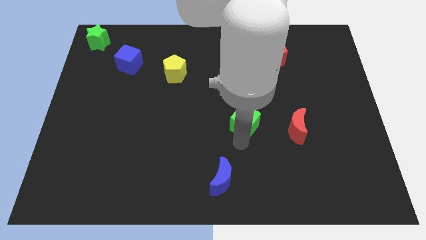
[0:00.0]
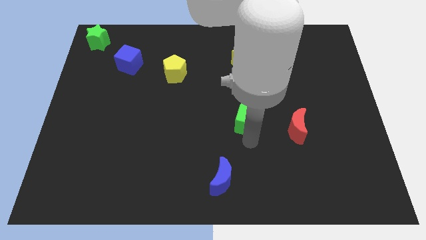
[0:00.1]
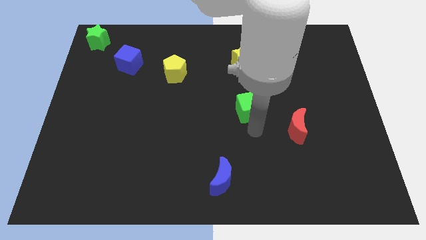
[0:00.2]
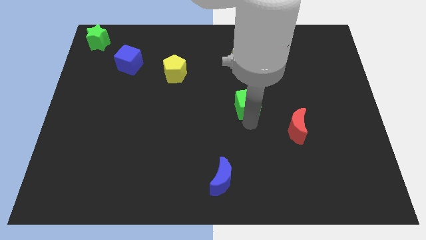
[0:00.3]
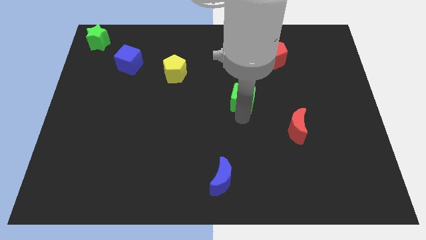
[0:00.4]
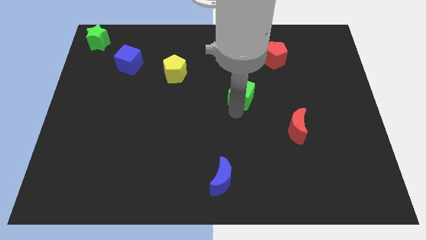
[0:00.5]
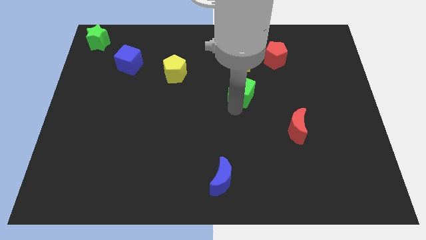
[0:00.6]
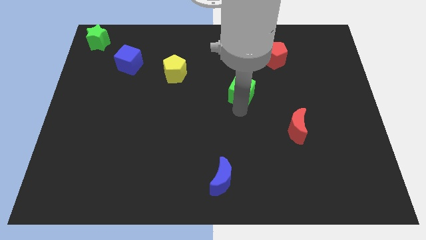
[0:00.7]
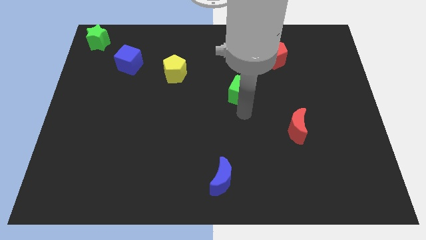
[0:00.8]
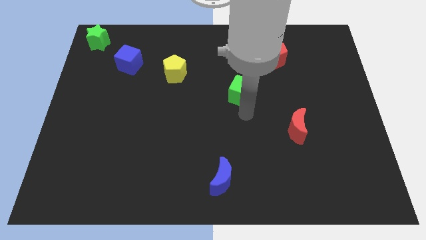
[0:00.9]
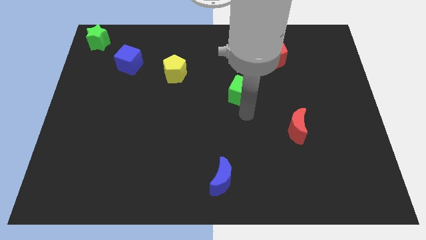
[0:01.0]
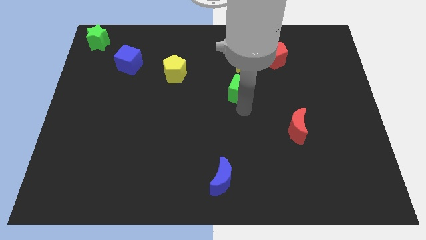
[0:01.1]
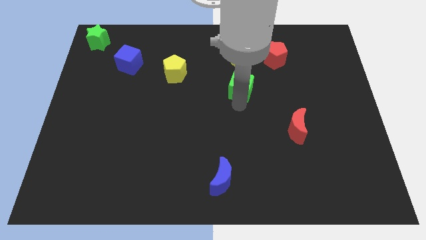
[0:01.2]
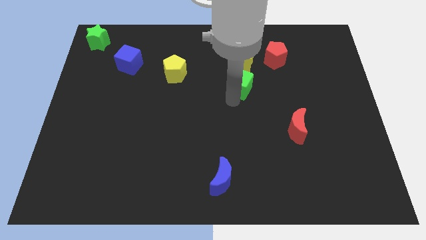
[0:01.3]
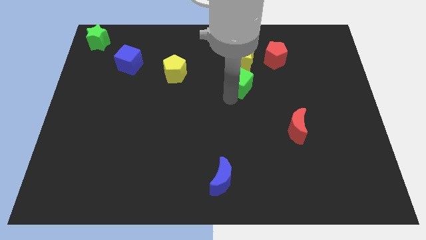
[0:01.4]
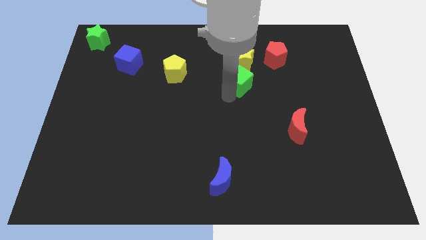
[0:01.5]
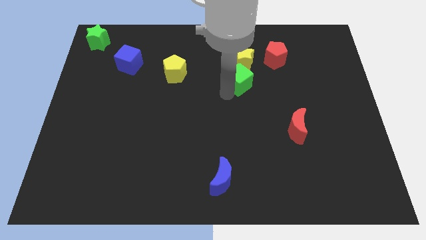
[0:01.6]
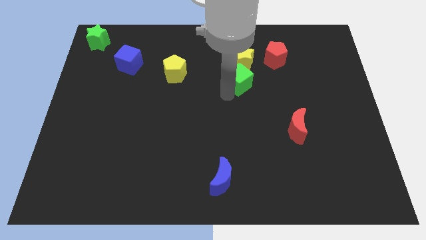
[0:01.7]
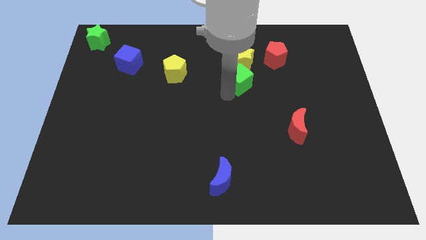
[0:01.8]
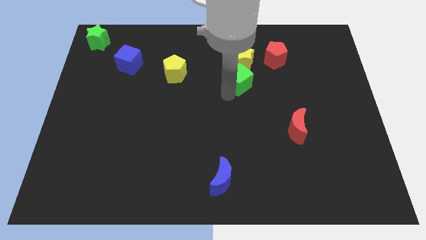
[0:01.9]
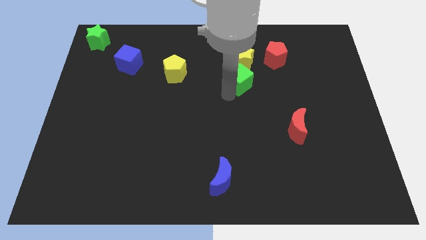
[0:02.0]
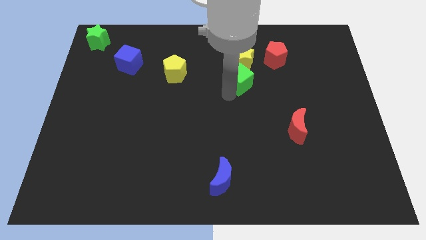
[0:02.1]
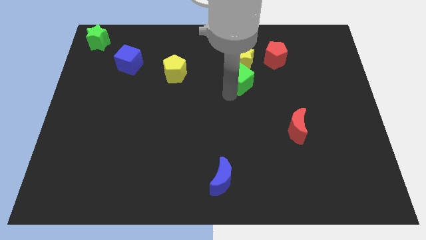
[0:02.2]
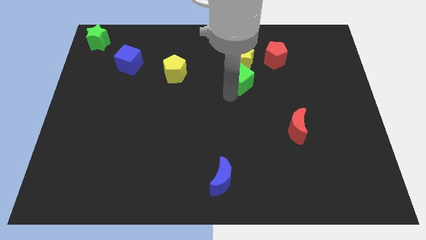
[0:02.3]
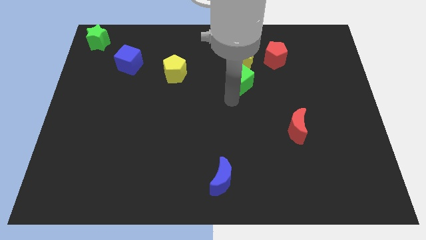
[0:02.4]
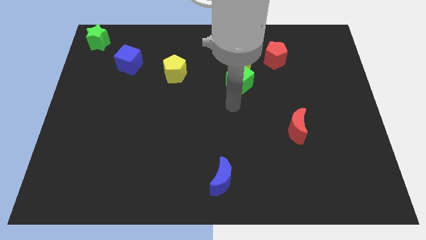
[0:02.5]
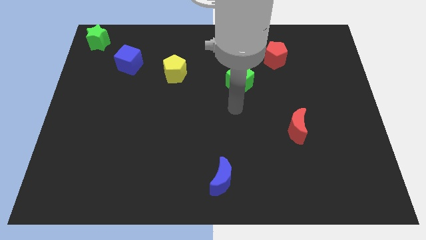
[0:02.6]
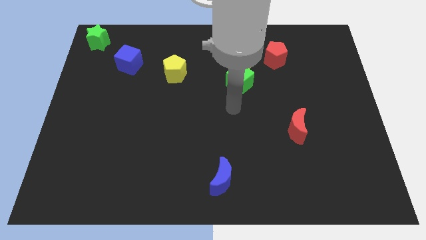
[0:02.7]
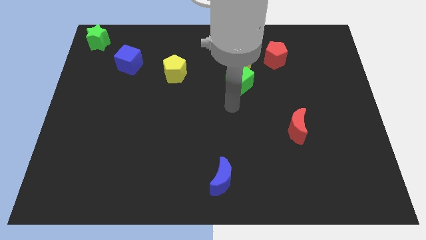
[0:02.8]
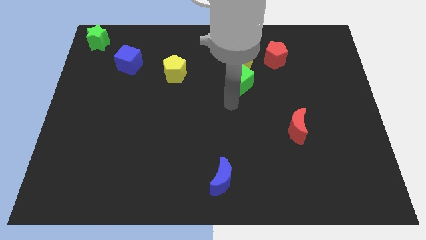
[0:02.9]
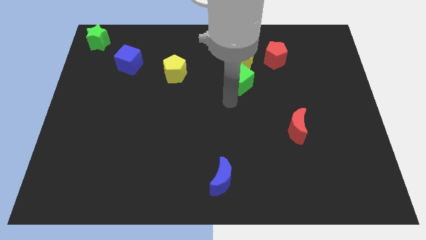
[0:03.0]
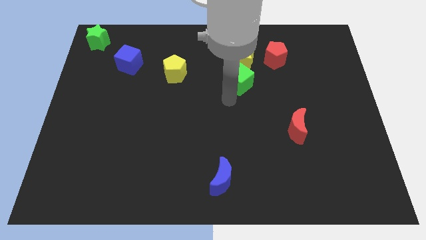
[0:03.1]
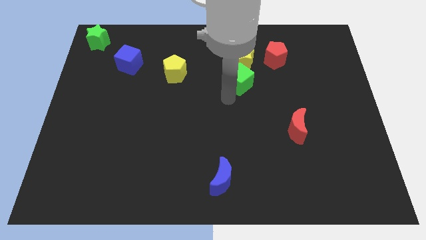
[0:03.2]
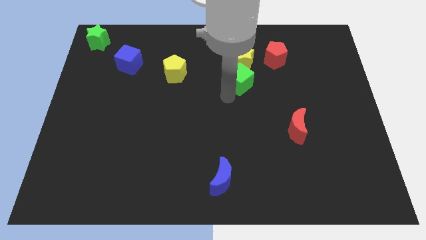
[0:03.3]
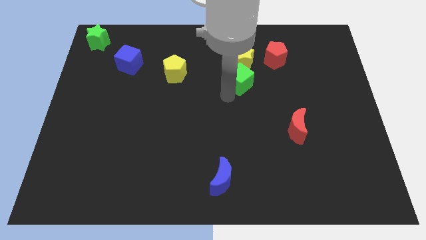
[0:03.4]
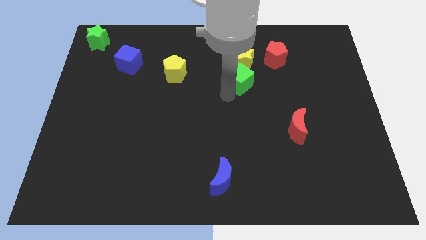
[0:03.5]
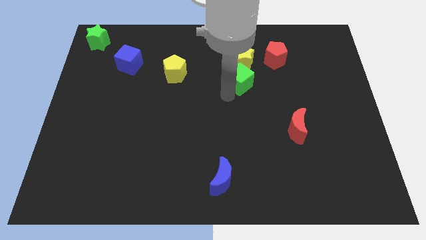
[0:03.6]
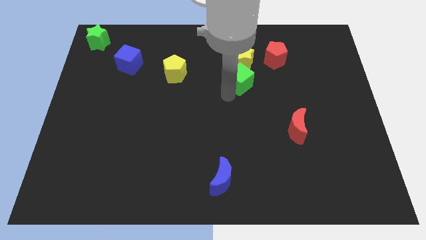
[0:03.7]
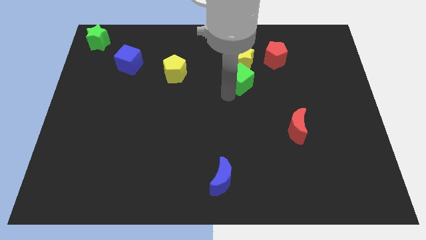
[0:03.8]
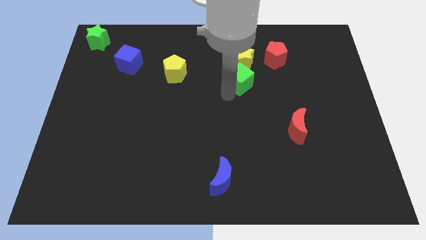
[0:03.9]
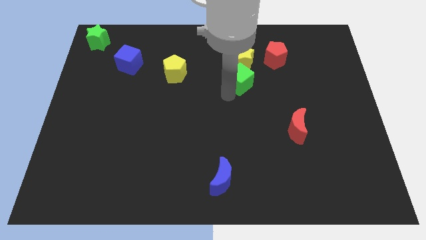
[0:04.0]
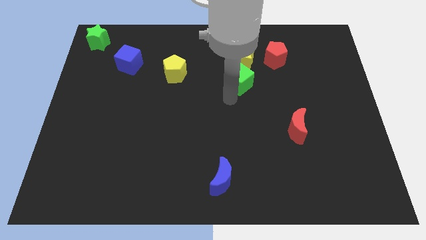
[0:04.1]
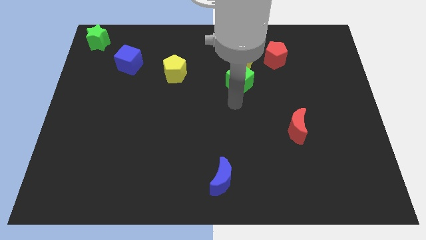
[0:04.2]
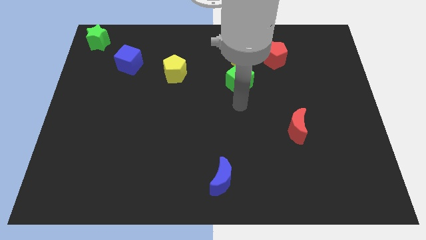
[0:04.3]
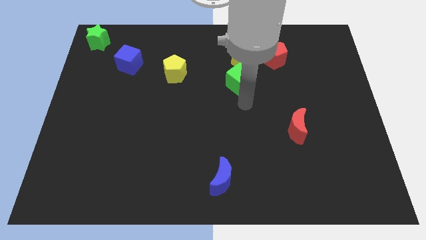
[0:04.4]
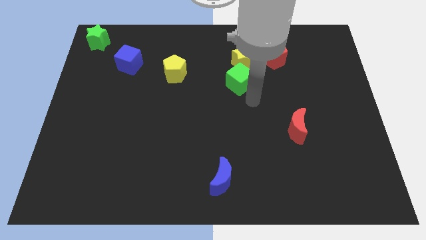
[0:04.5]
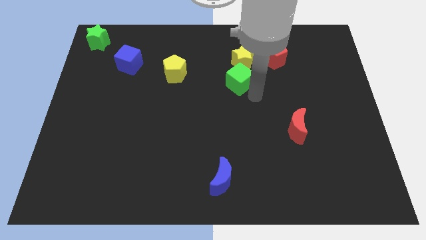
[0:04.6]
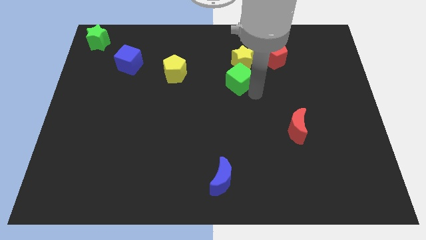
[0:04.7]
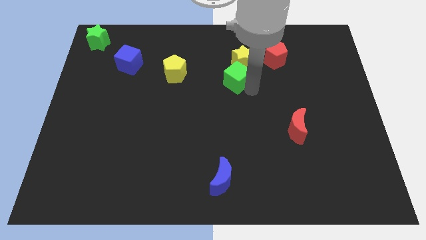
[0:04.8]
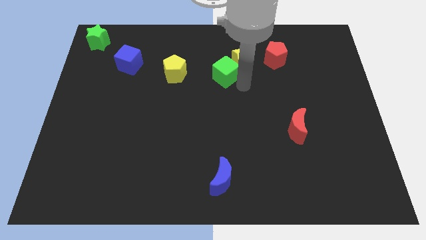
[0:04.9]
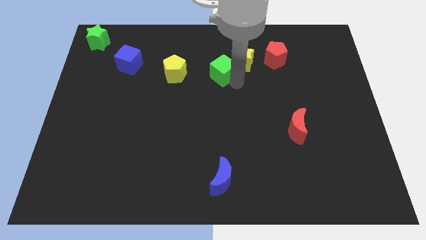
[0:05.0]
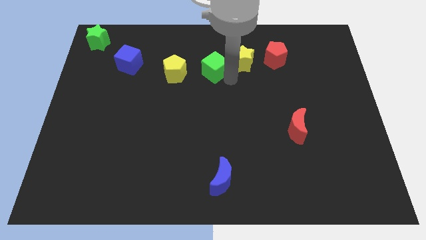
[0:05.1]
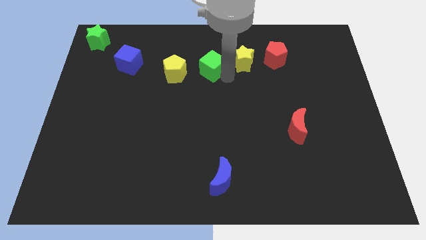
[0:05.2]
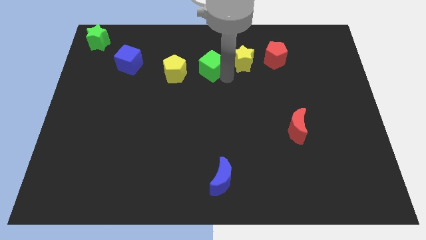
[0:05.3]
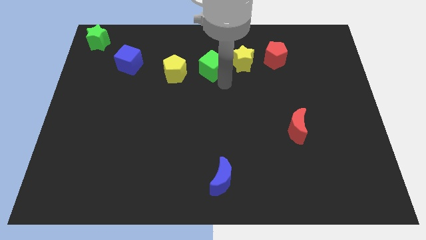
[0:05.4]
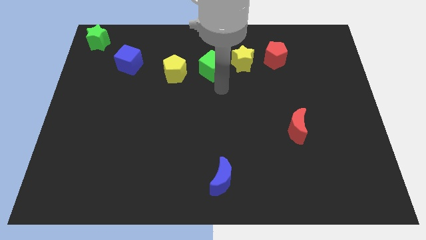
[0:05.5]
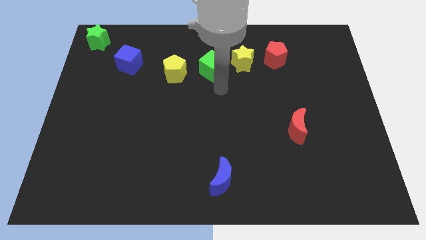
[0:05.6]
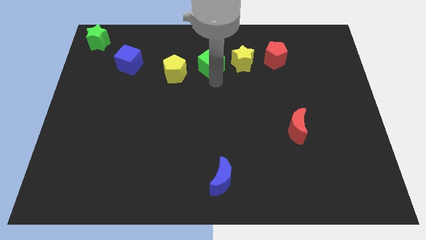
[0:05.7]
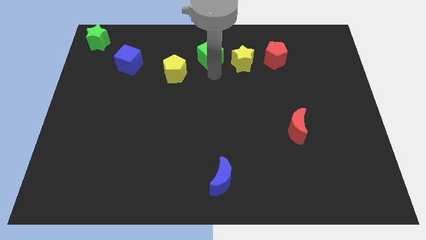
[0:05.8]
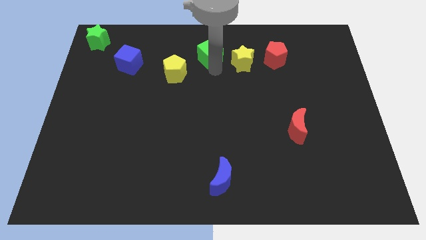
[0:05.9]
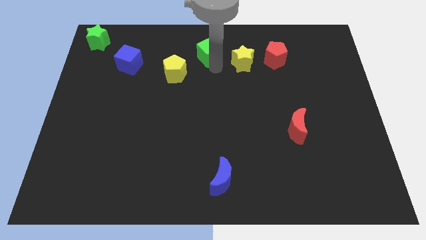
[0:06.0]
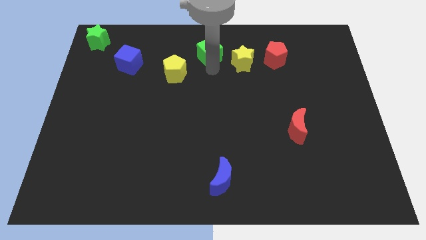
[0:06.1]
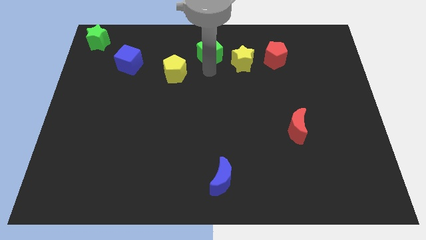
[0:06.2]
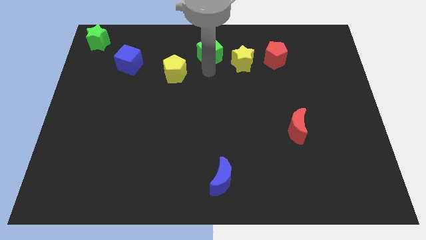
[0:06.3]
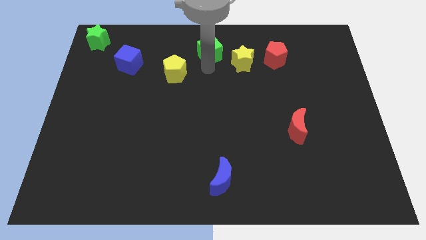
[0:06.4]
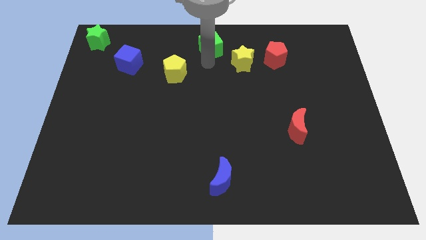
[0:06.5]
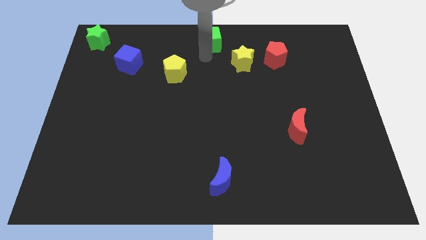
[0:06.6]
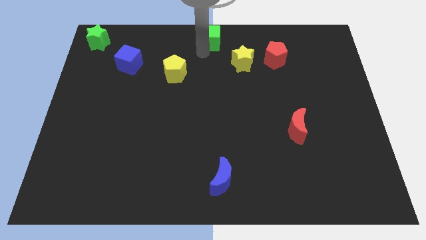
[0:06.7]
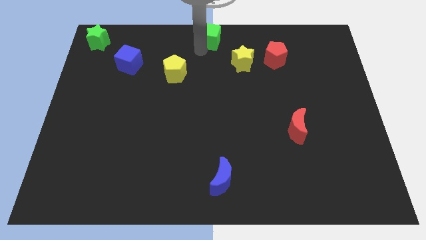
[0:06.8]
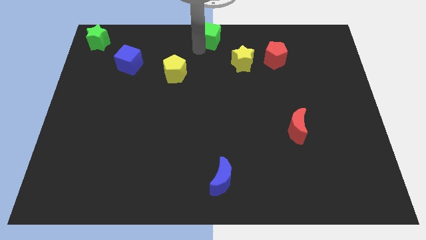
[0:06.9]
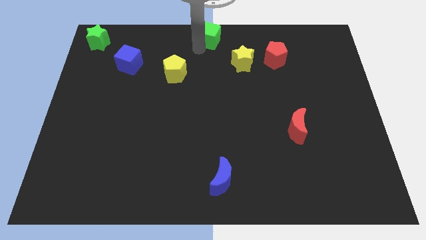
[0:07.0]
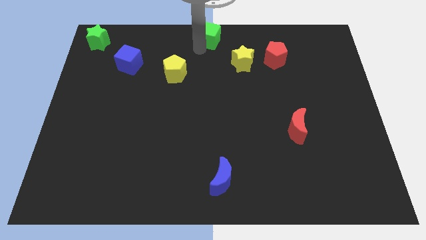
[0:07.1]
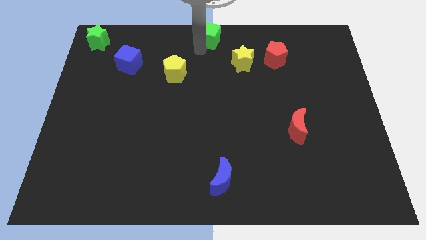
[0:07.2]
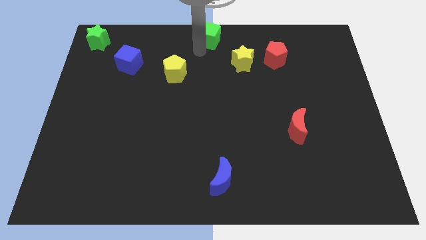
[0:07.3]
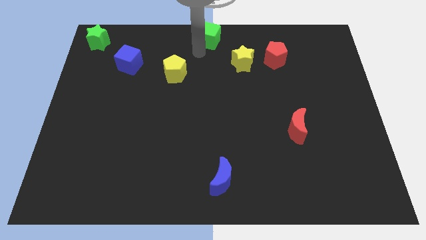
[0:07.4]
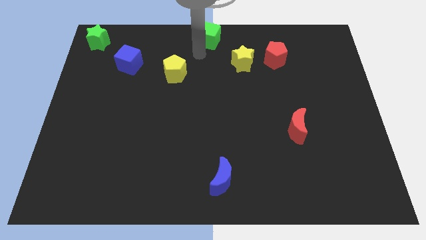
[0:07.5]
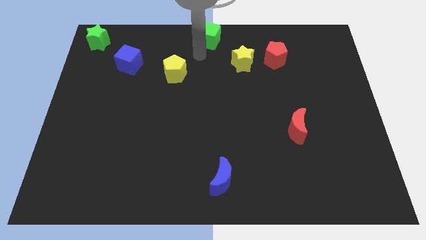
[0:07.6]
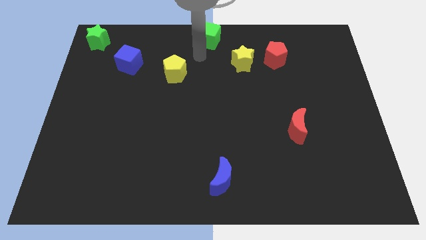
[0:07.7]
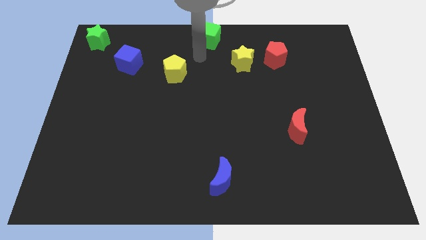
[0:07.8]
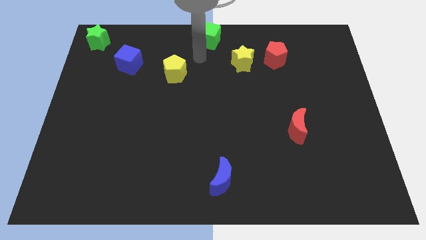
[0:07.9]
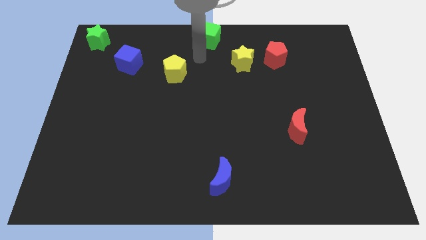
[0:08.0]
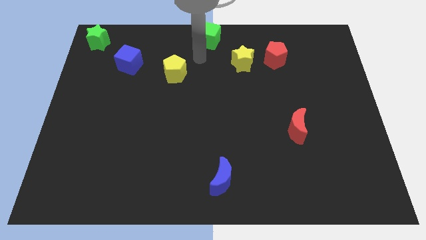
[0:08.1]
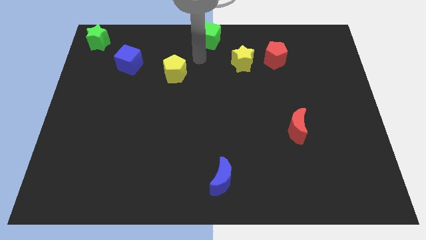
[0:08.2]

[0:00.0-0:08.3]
push the green cube to the top center of the board

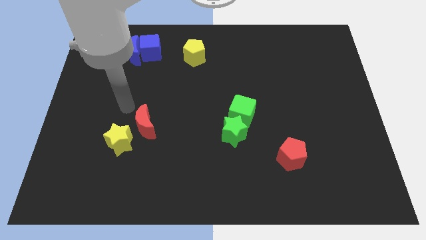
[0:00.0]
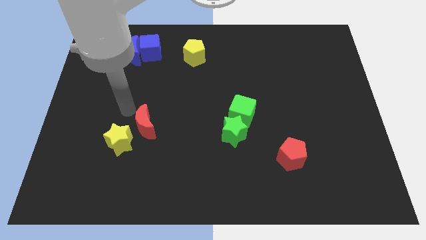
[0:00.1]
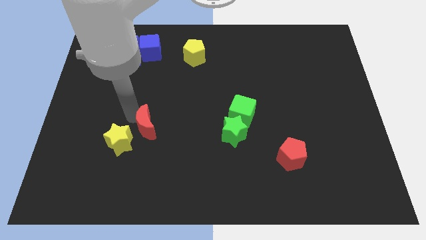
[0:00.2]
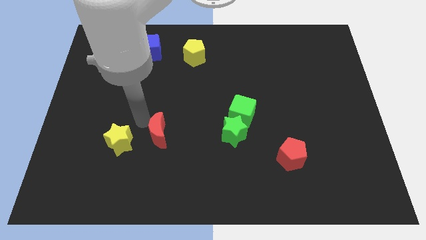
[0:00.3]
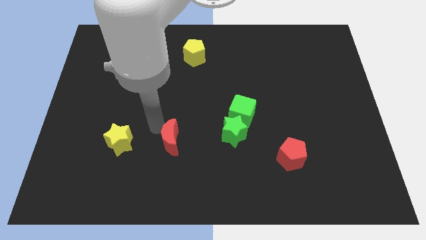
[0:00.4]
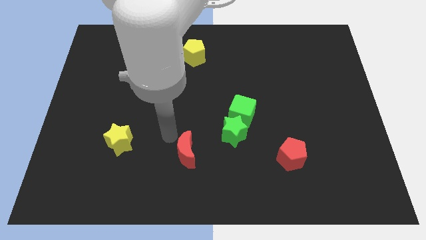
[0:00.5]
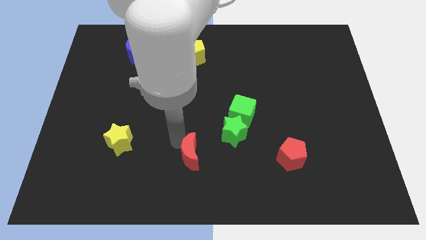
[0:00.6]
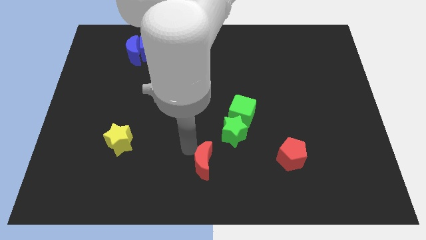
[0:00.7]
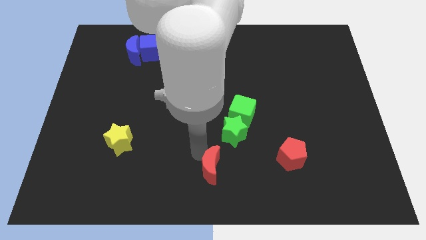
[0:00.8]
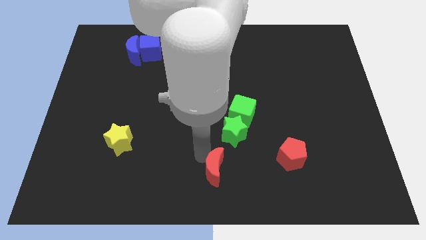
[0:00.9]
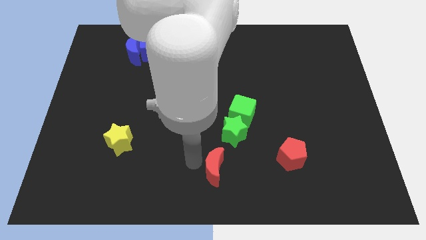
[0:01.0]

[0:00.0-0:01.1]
slide red moon to the bottom left of green star
